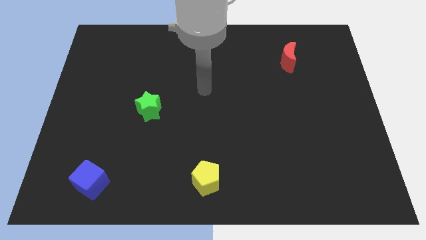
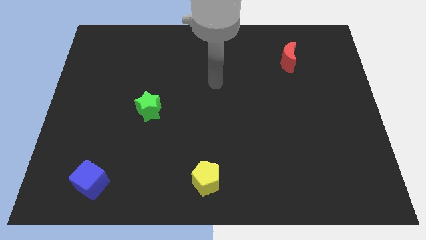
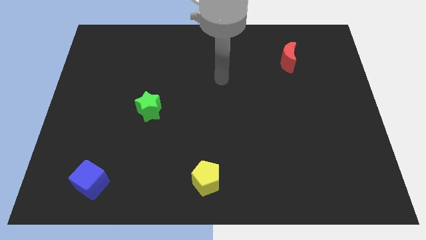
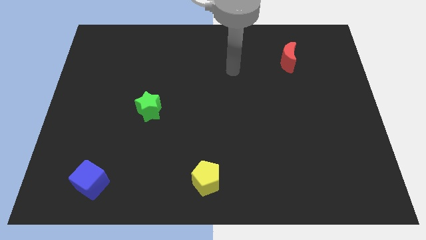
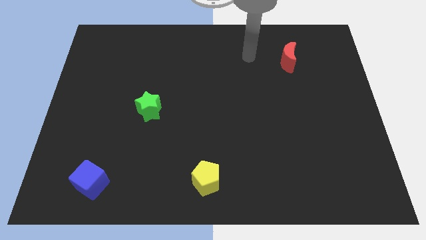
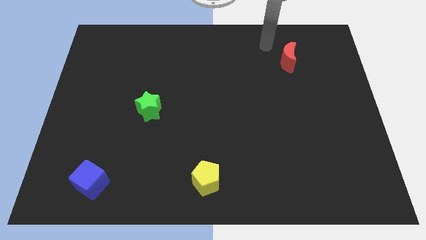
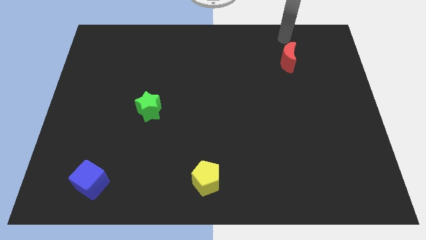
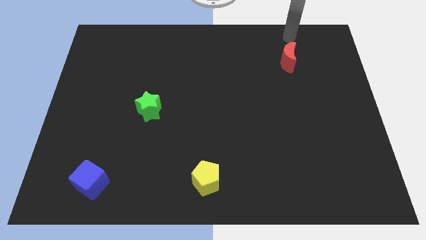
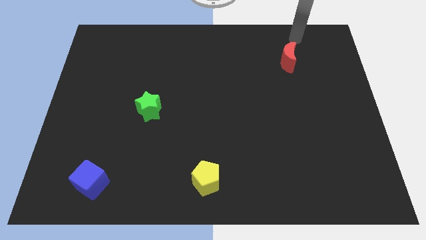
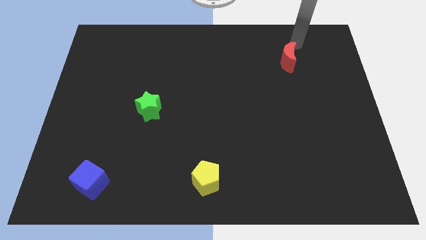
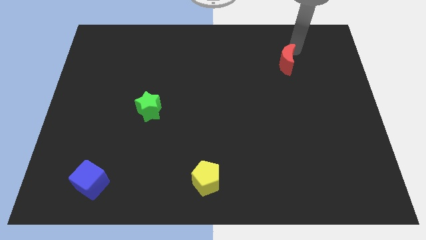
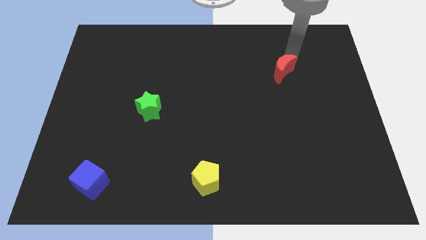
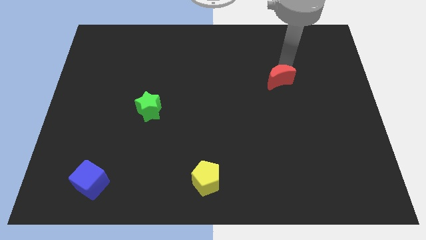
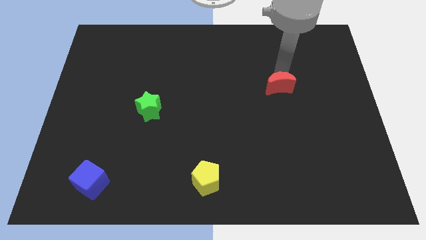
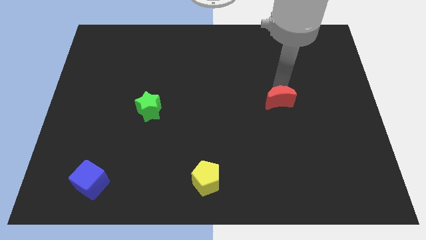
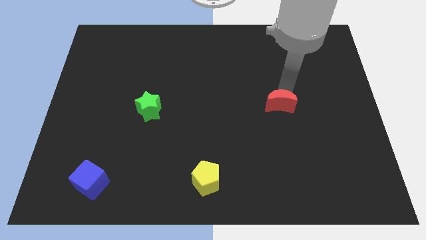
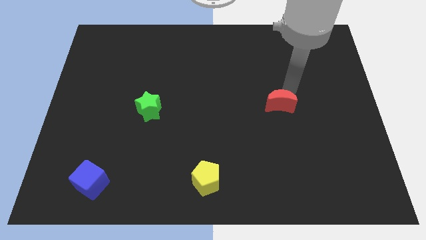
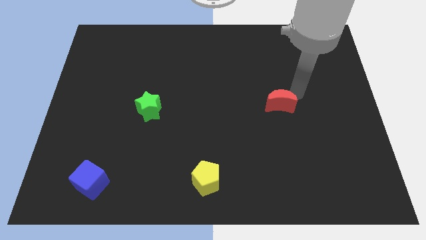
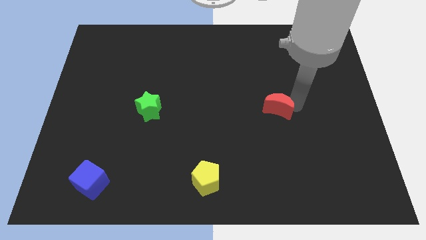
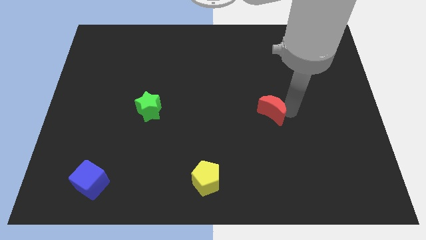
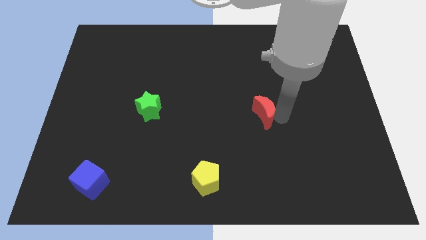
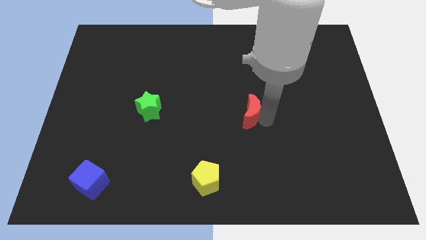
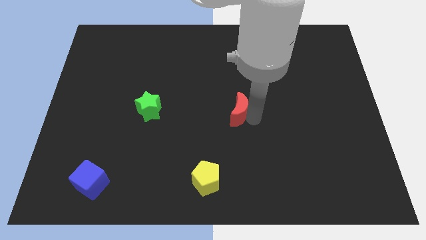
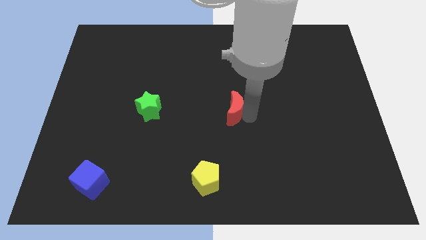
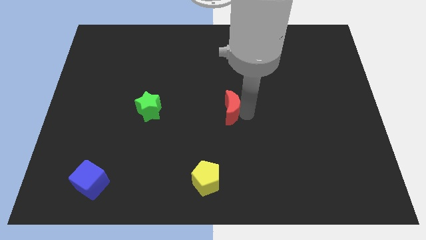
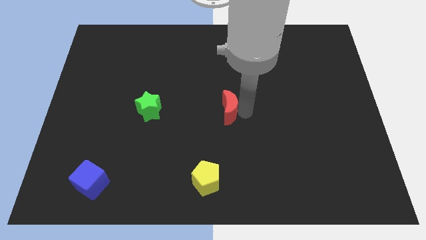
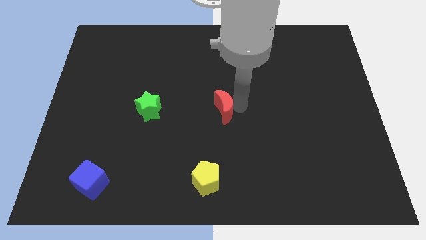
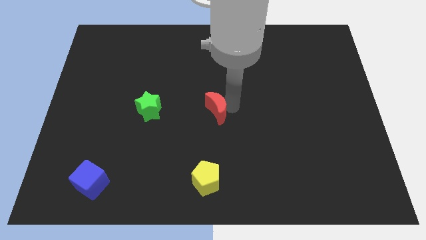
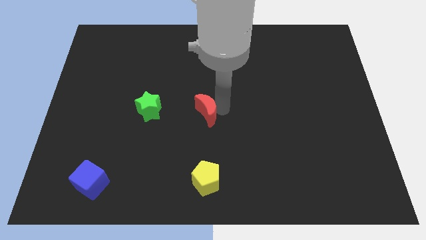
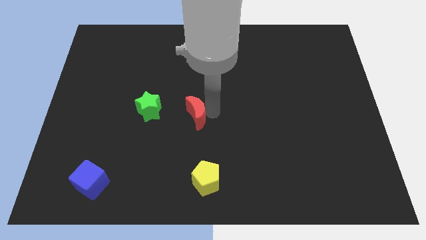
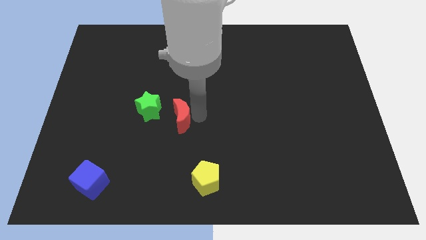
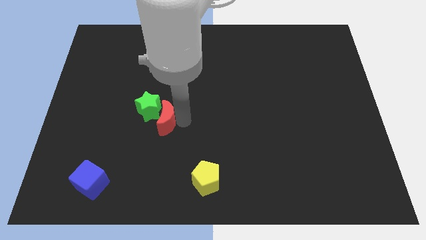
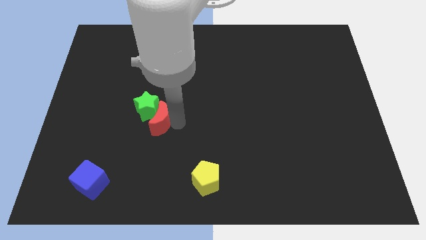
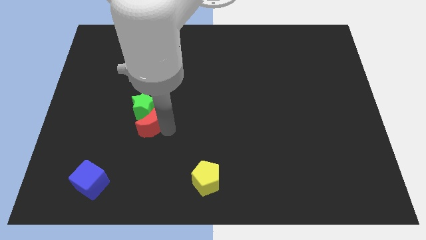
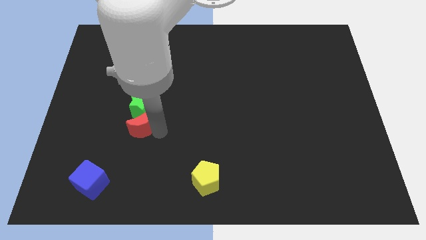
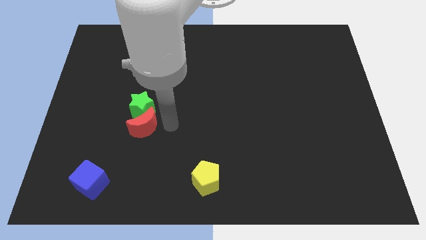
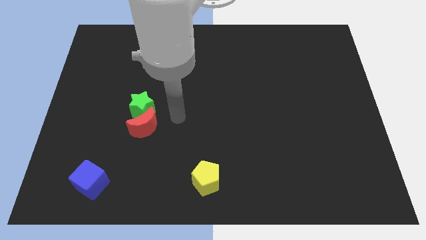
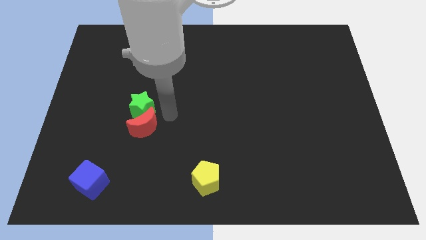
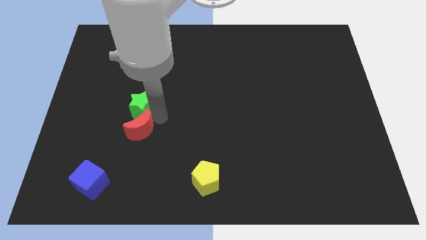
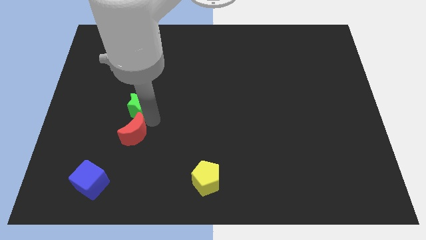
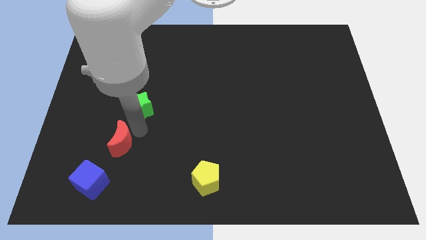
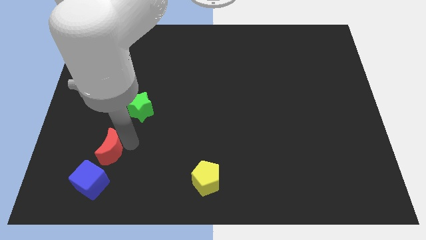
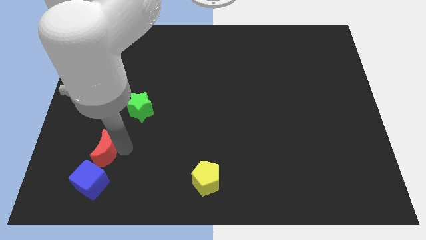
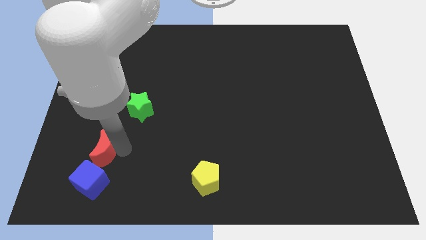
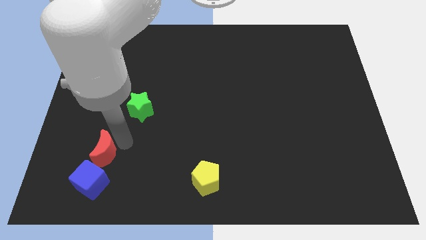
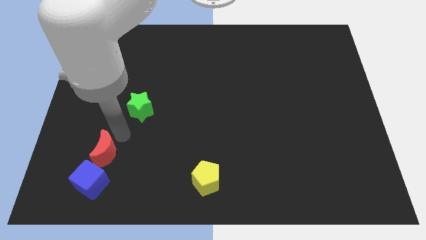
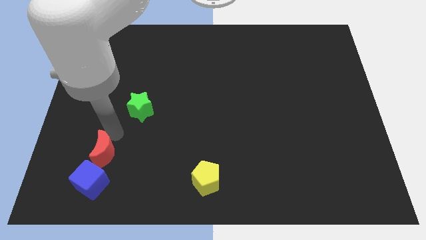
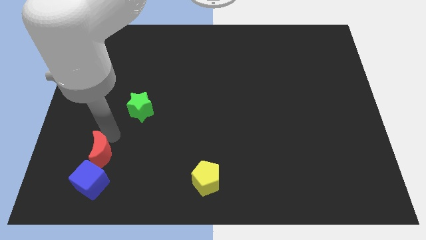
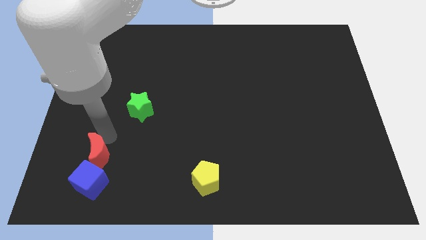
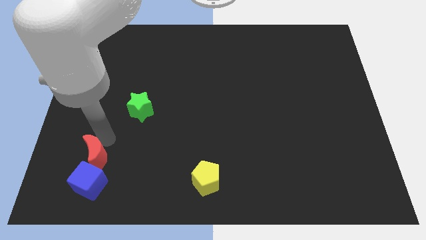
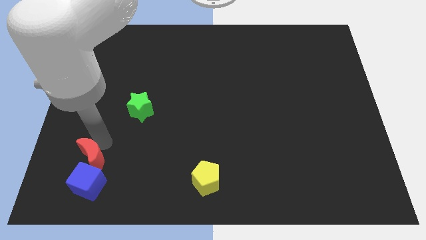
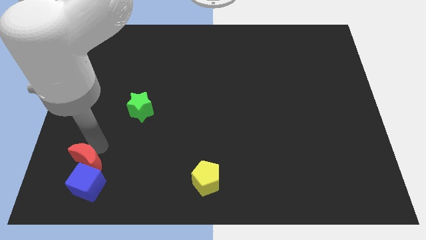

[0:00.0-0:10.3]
slide the red moon towards the cube

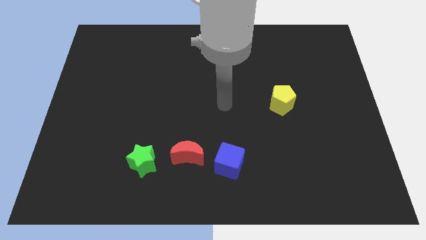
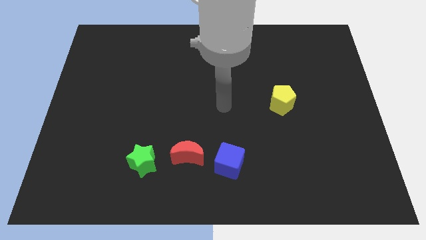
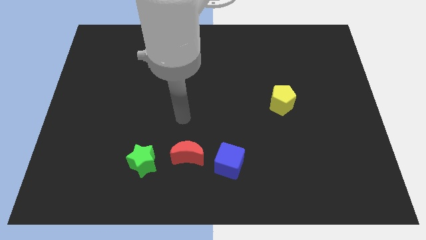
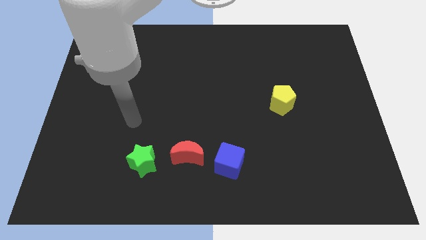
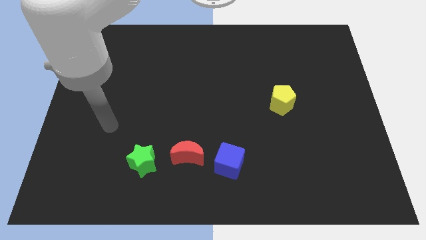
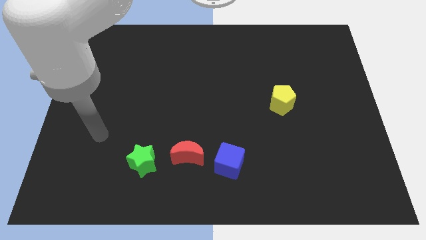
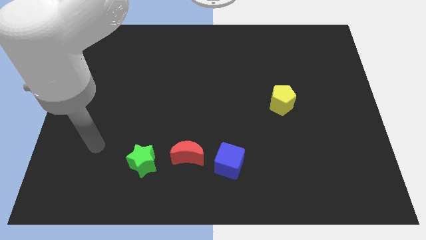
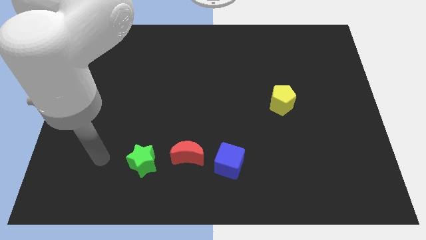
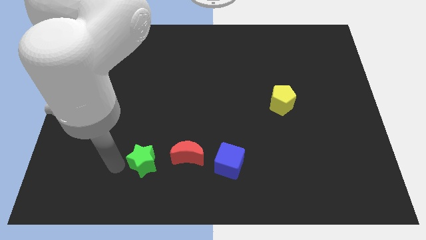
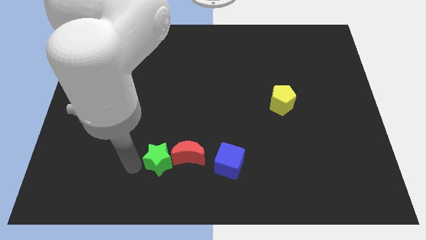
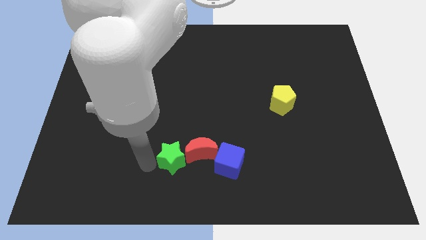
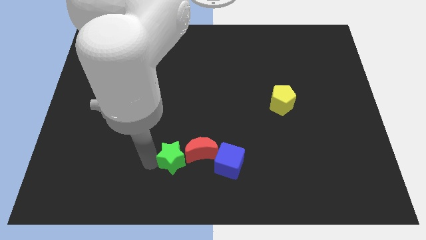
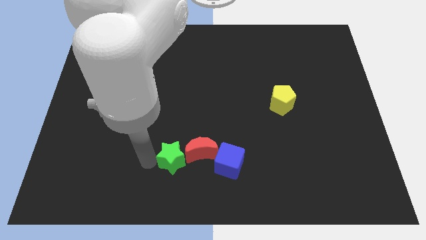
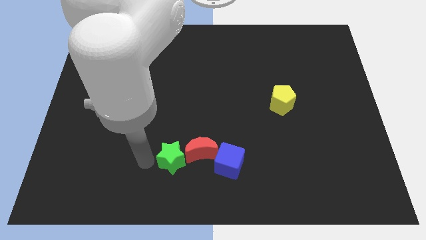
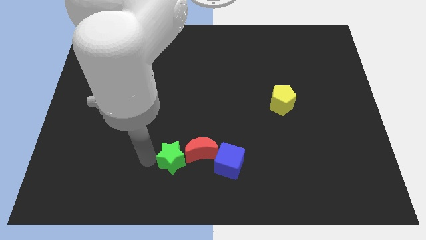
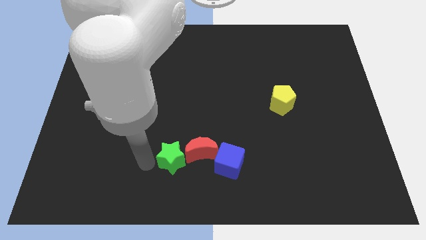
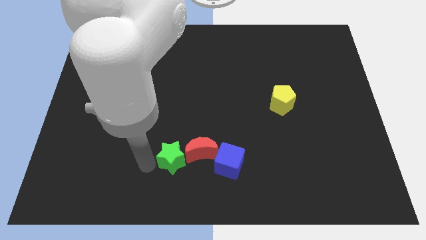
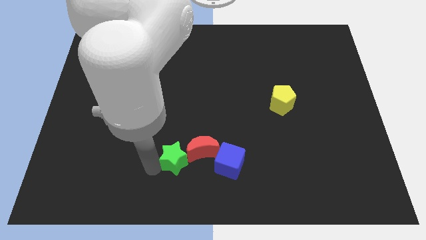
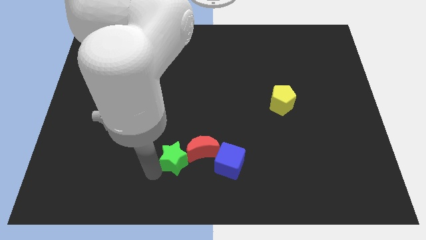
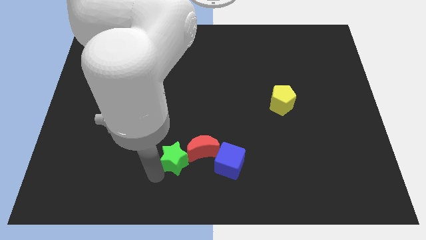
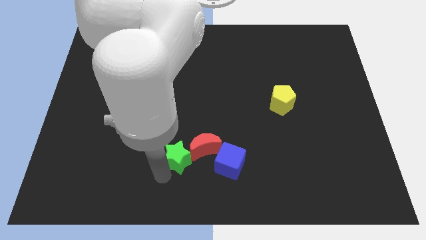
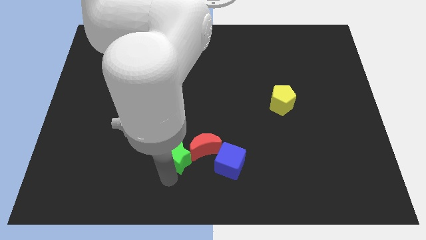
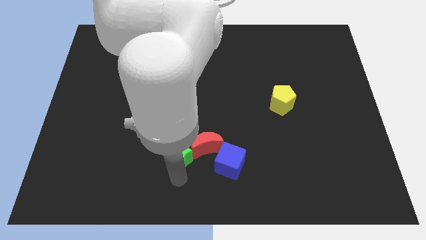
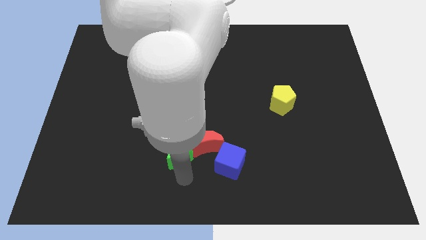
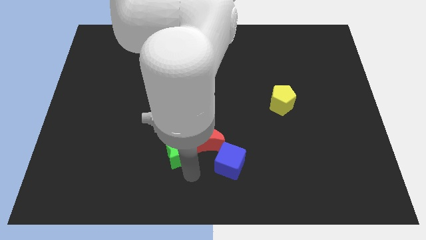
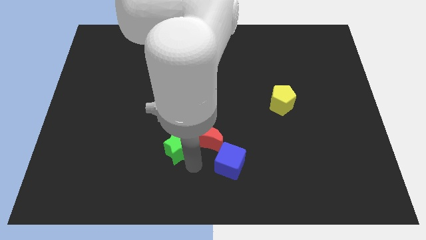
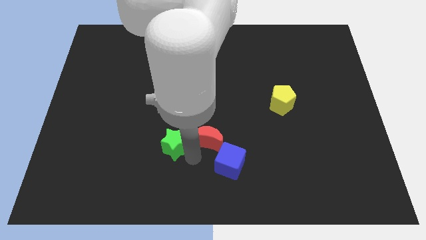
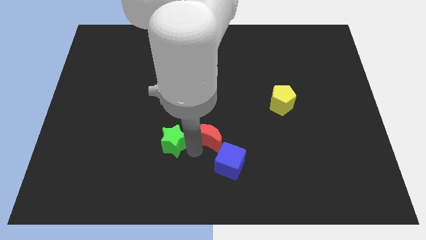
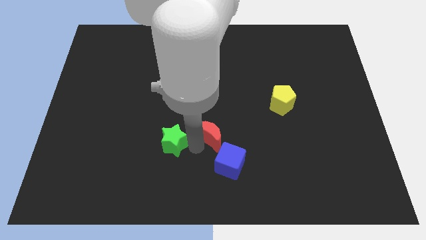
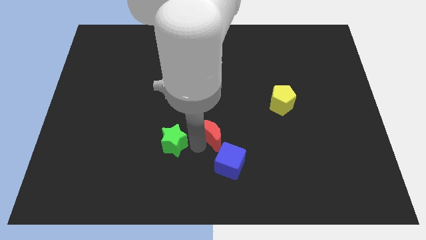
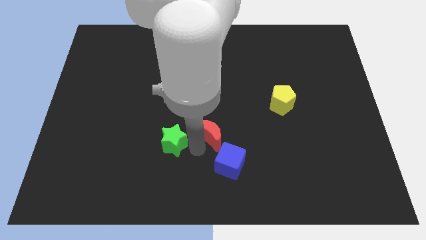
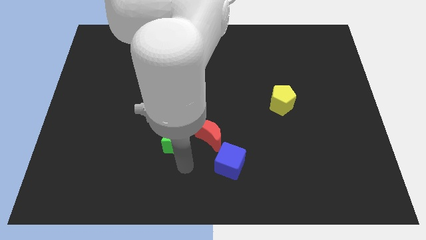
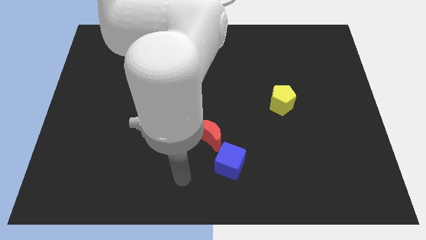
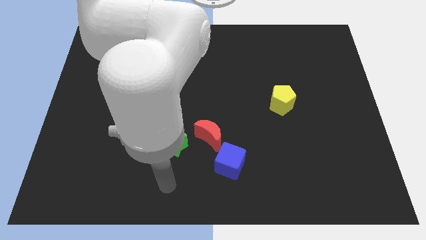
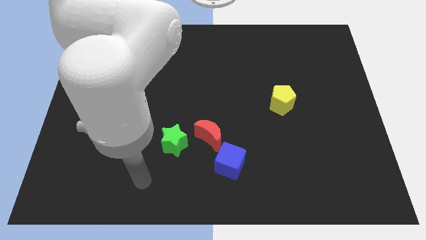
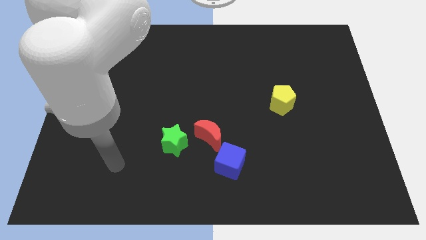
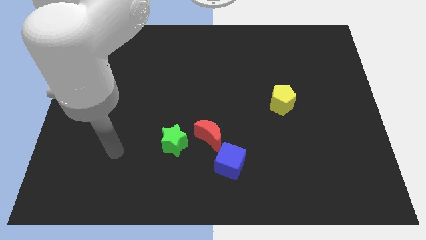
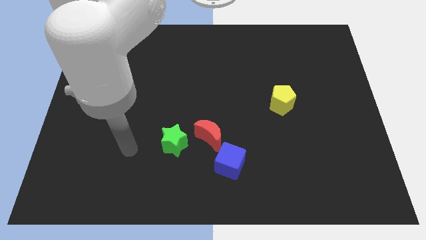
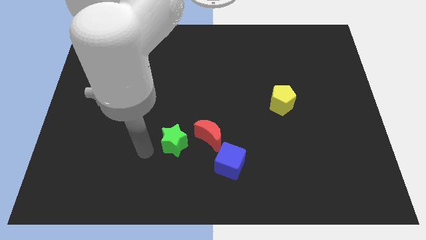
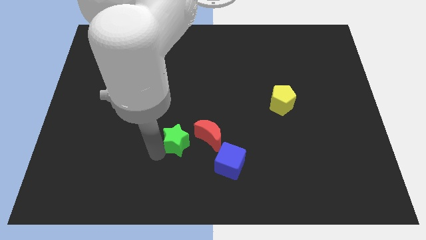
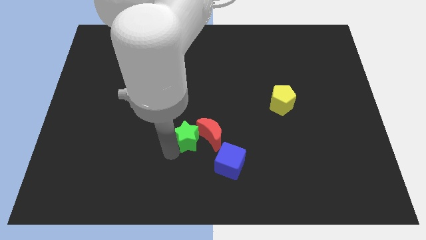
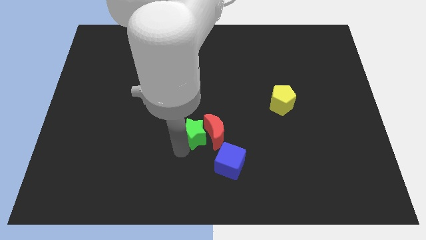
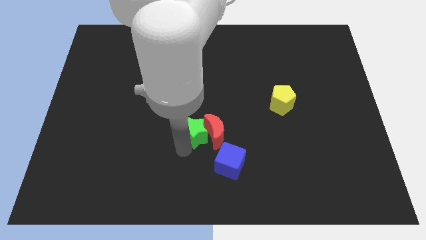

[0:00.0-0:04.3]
push the green star close to the red block
